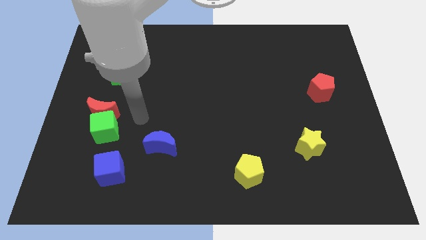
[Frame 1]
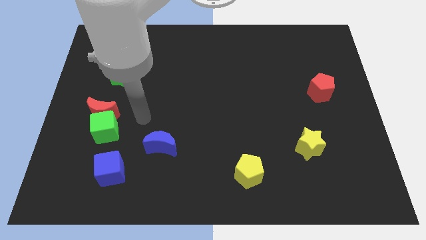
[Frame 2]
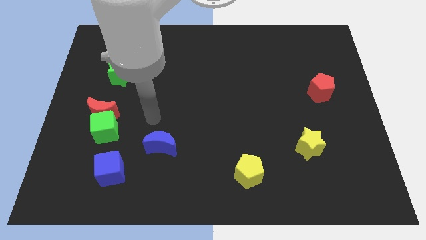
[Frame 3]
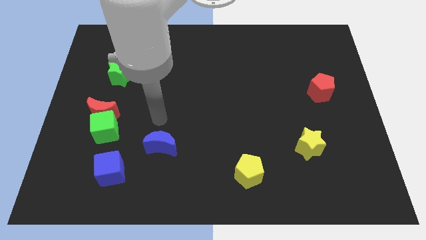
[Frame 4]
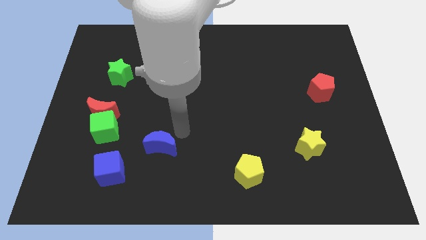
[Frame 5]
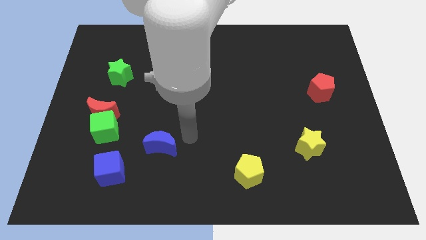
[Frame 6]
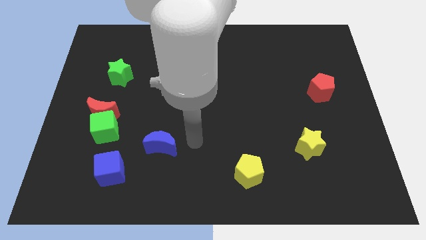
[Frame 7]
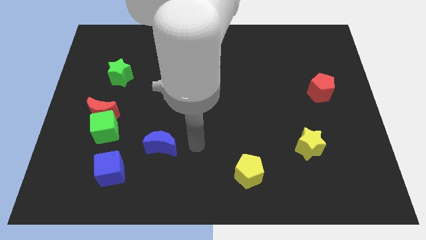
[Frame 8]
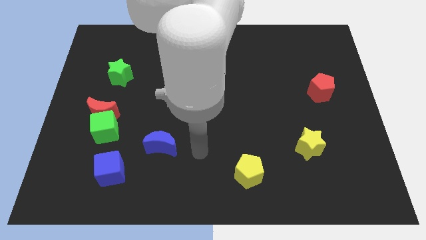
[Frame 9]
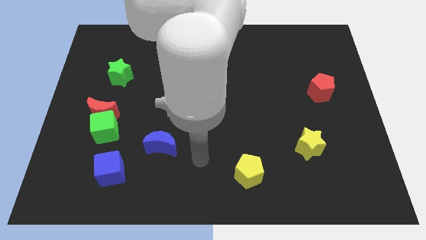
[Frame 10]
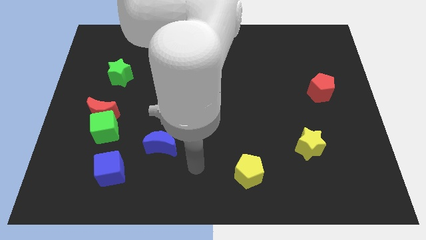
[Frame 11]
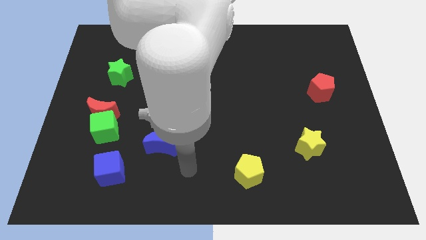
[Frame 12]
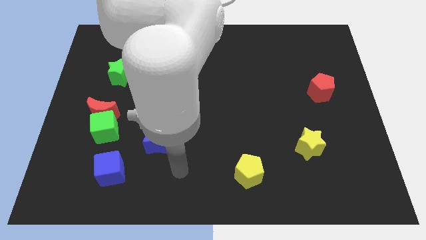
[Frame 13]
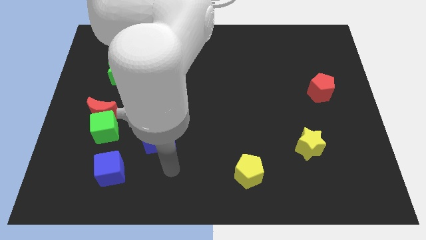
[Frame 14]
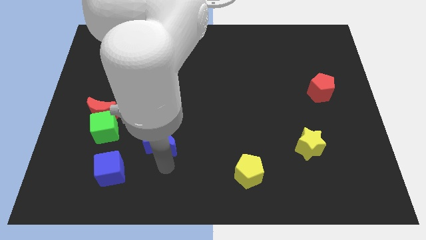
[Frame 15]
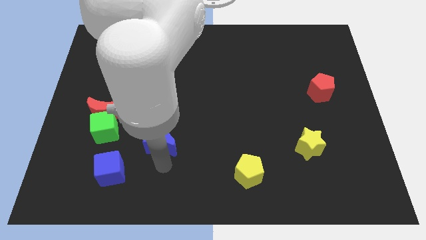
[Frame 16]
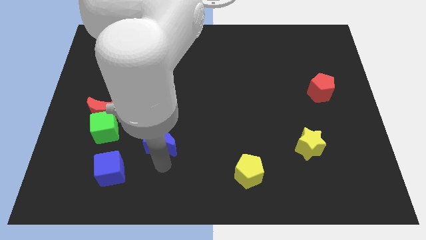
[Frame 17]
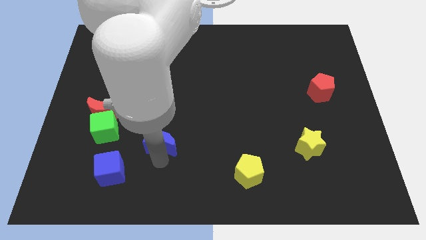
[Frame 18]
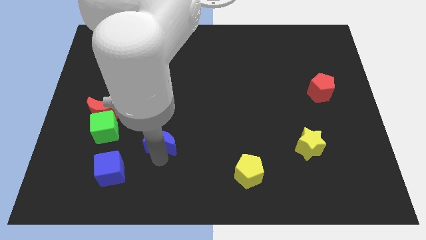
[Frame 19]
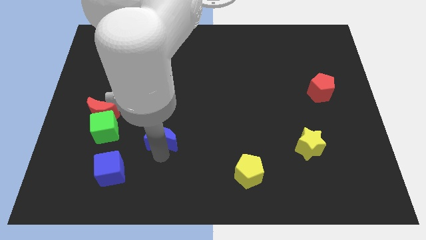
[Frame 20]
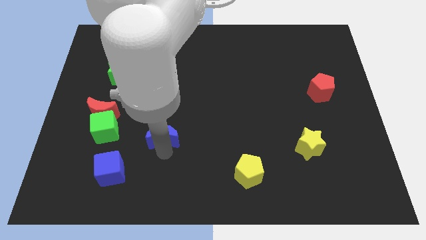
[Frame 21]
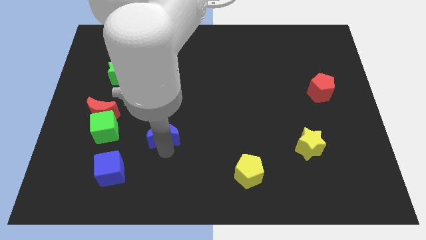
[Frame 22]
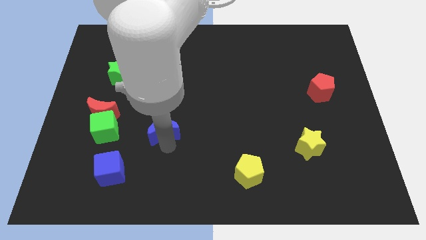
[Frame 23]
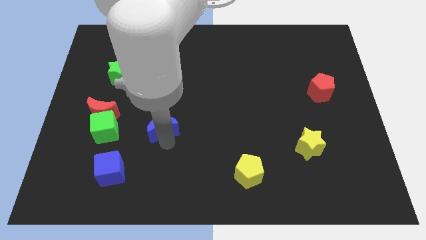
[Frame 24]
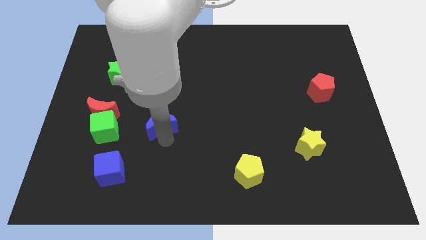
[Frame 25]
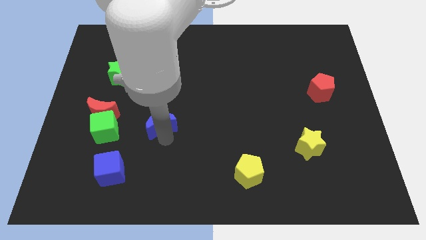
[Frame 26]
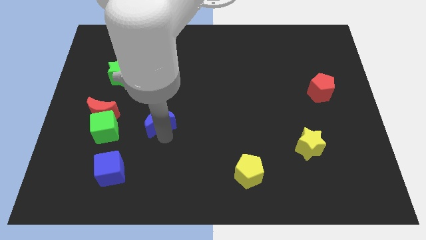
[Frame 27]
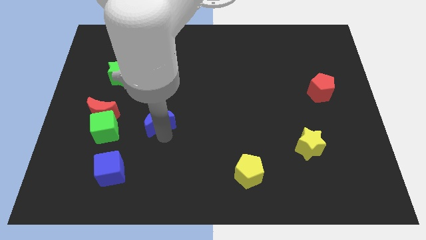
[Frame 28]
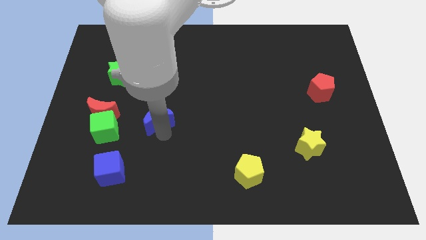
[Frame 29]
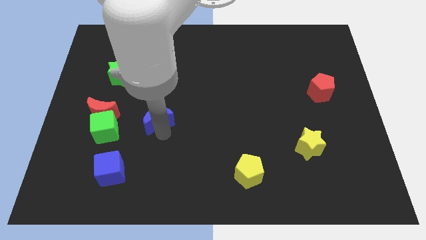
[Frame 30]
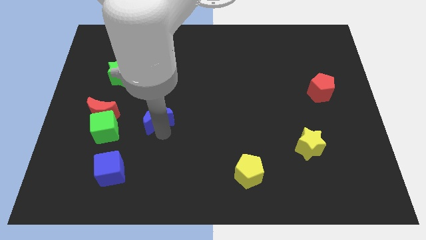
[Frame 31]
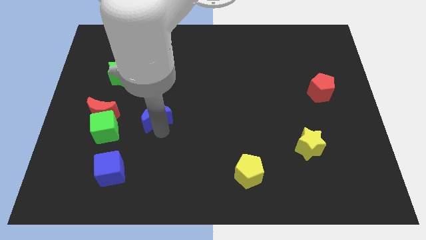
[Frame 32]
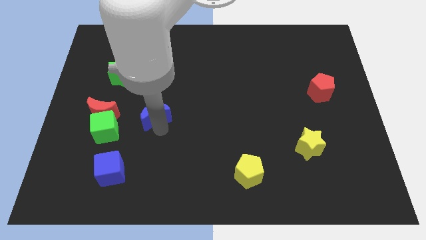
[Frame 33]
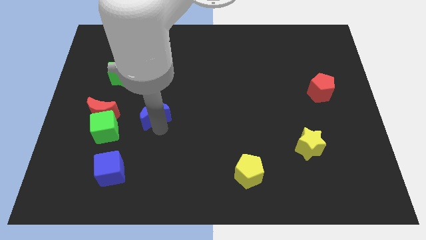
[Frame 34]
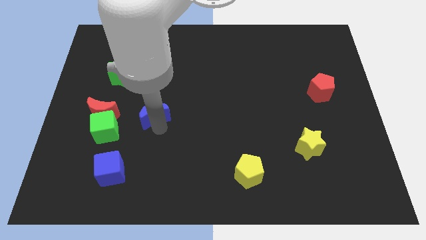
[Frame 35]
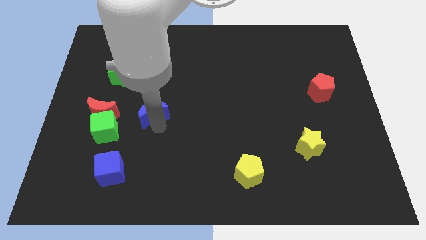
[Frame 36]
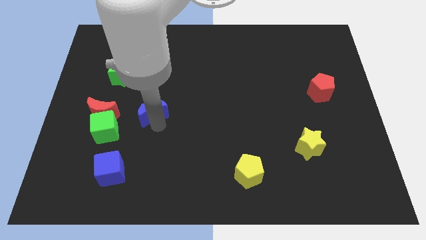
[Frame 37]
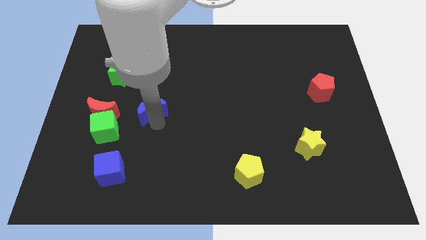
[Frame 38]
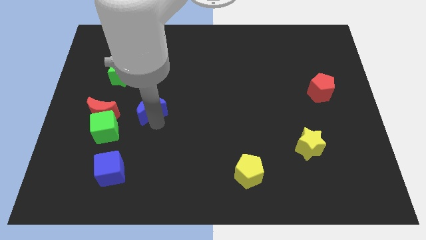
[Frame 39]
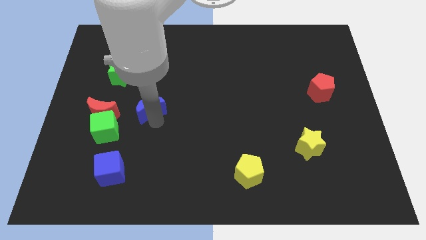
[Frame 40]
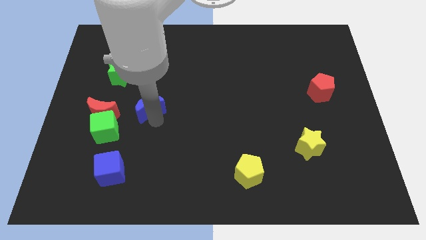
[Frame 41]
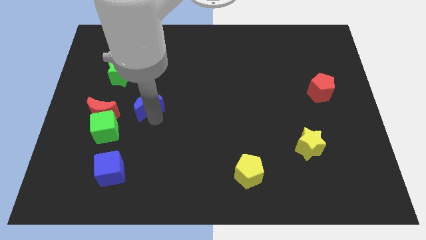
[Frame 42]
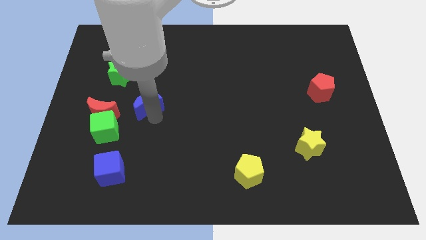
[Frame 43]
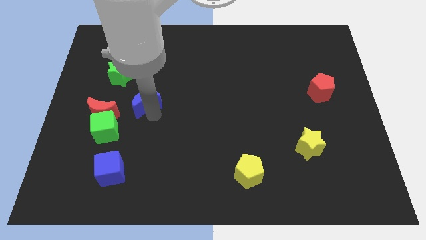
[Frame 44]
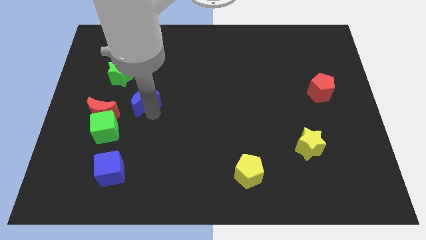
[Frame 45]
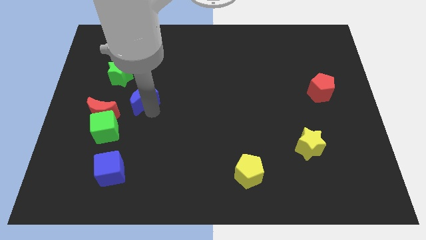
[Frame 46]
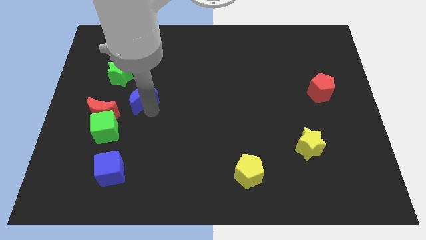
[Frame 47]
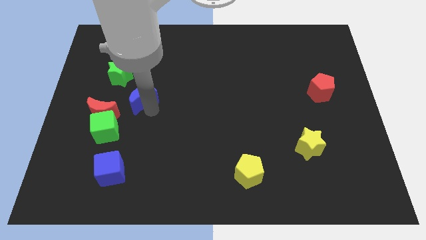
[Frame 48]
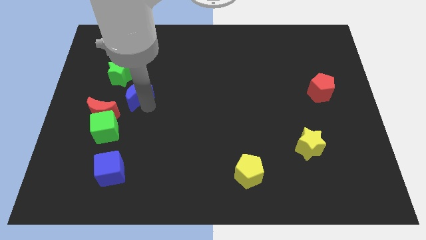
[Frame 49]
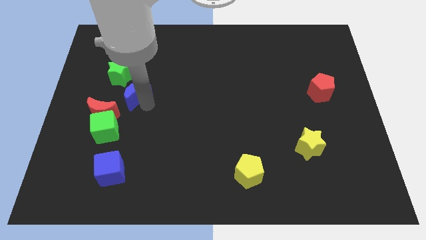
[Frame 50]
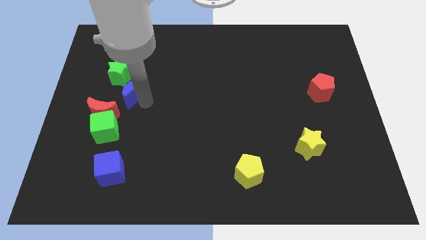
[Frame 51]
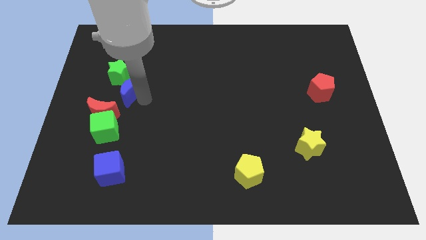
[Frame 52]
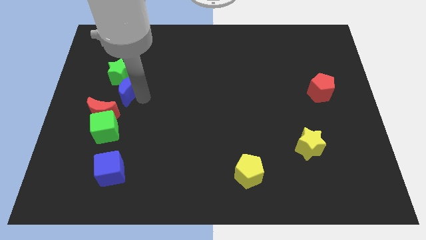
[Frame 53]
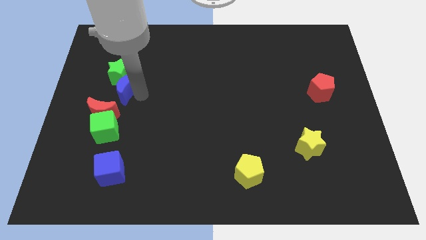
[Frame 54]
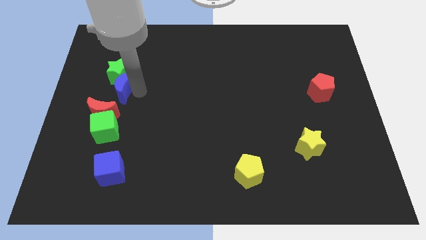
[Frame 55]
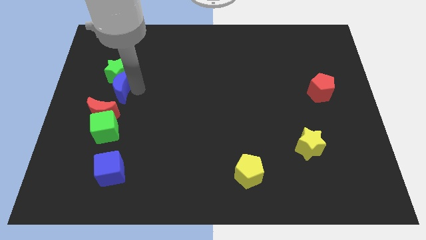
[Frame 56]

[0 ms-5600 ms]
push the blue moon close to the green star

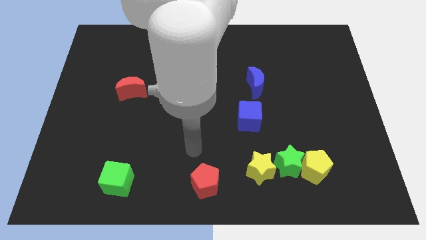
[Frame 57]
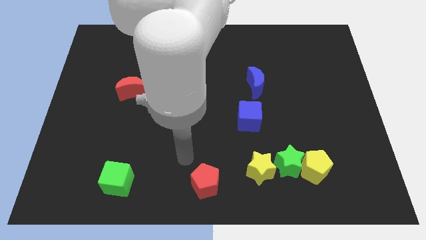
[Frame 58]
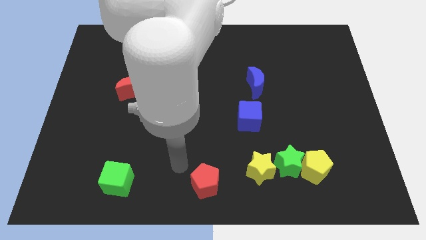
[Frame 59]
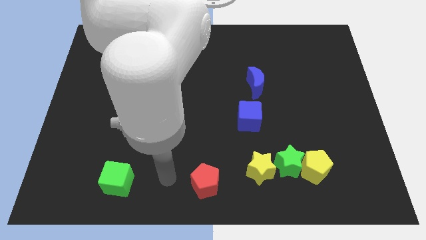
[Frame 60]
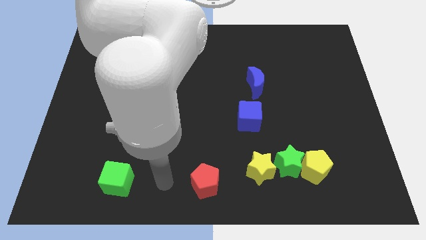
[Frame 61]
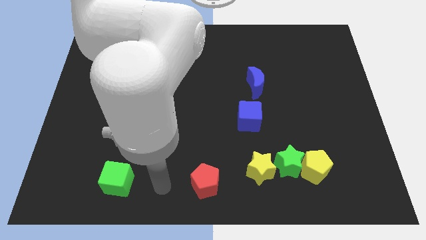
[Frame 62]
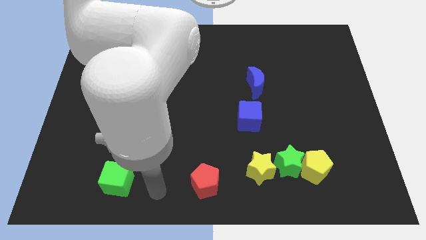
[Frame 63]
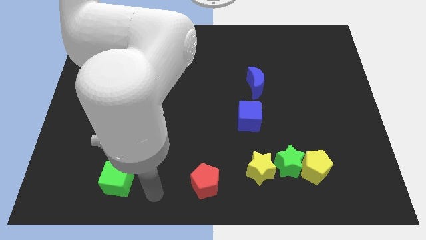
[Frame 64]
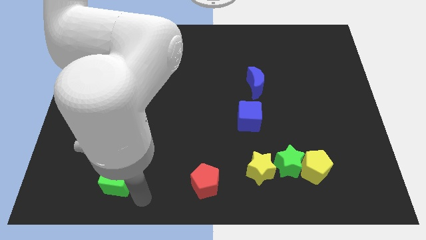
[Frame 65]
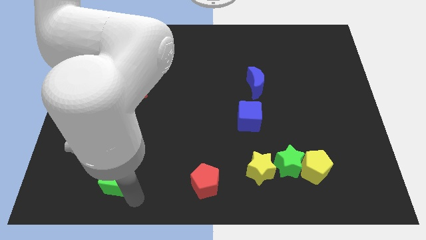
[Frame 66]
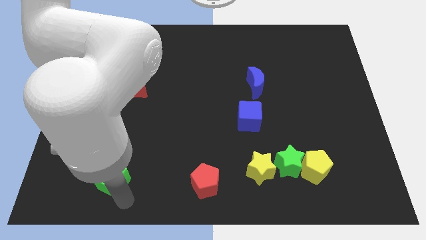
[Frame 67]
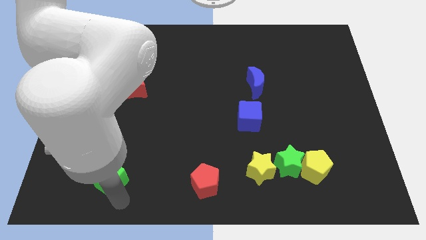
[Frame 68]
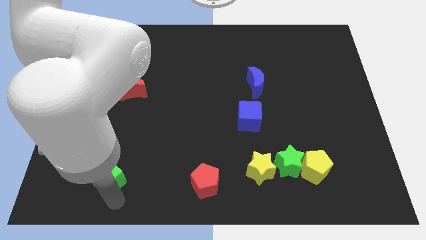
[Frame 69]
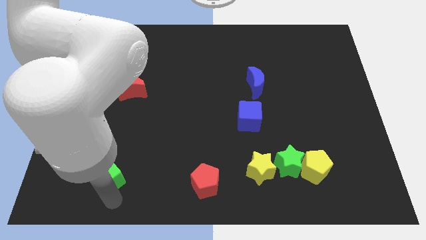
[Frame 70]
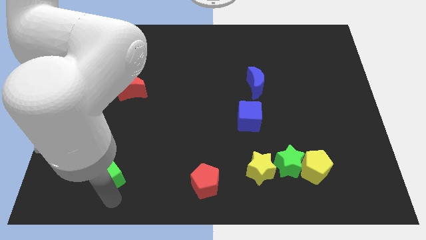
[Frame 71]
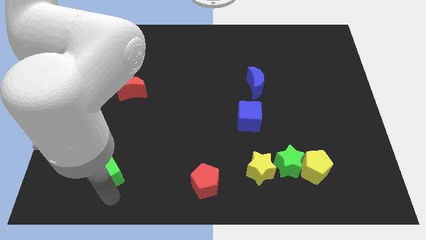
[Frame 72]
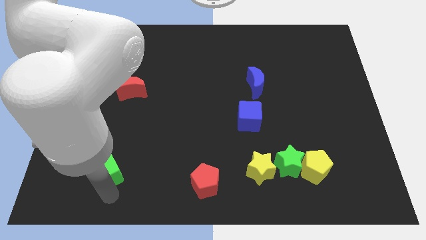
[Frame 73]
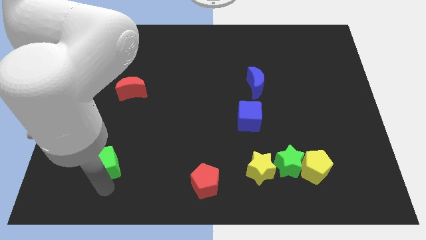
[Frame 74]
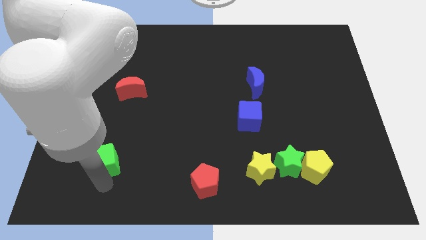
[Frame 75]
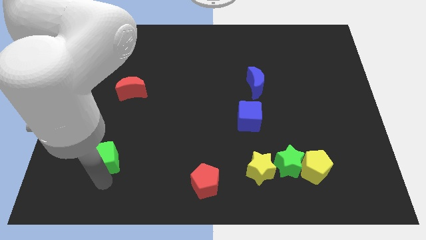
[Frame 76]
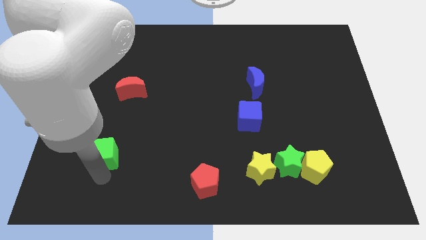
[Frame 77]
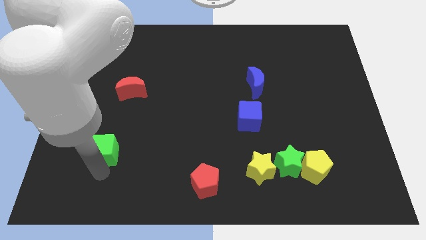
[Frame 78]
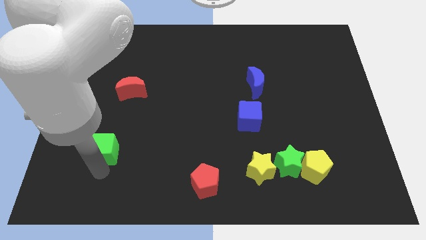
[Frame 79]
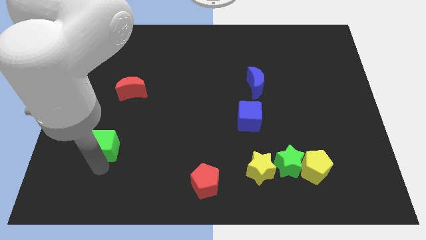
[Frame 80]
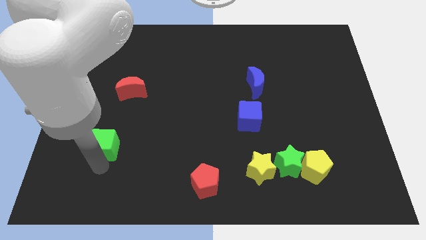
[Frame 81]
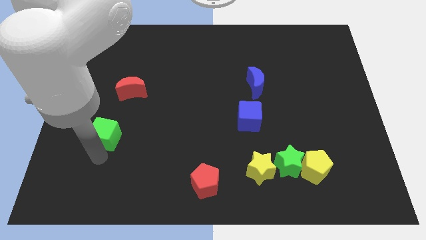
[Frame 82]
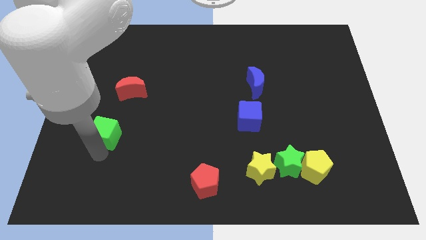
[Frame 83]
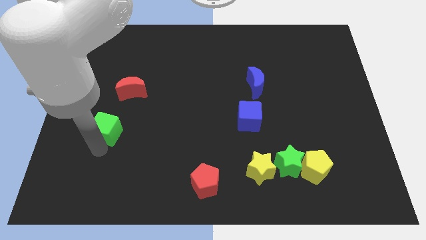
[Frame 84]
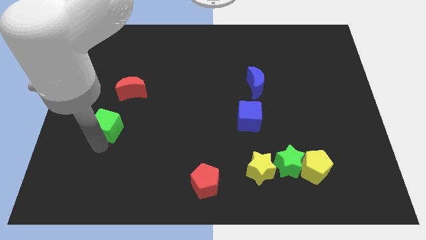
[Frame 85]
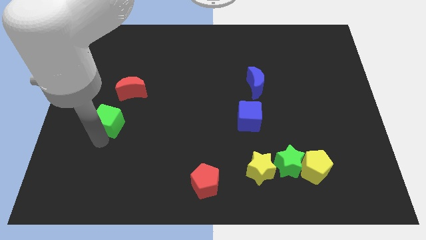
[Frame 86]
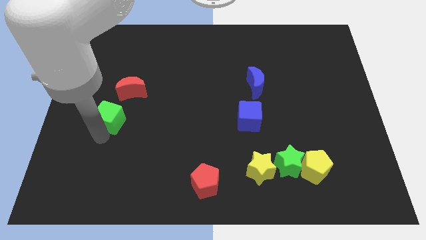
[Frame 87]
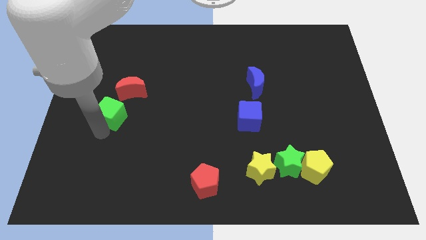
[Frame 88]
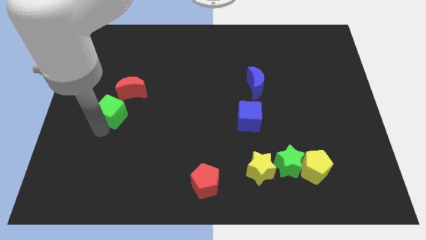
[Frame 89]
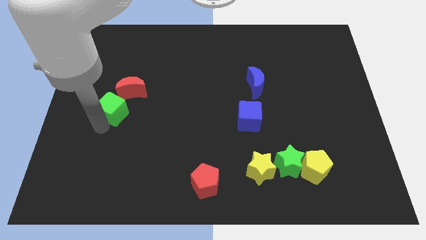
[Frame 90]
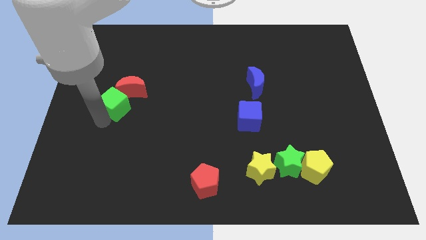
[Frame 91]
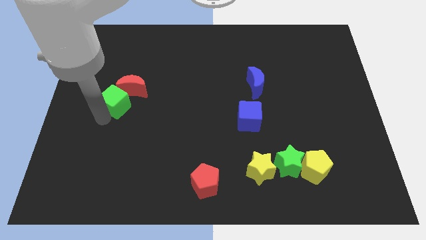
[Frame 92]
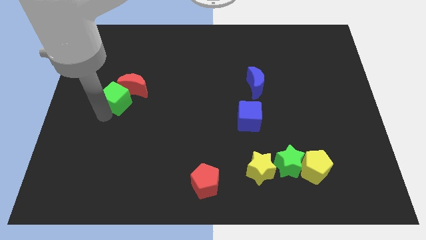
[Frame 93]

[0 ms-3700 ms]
push the green cube towards the red moon
